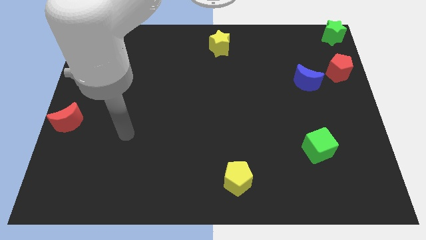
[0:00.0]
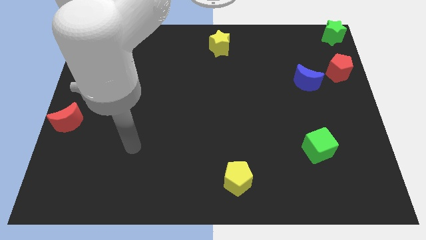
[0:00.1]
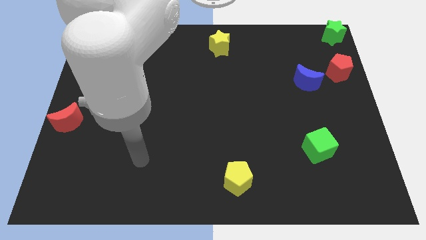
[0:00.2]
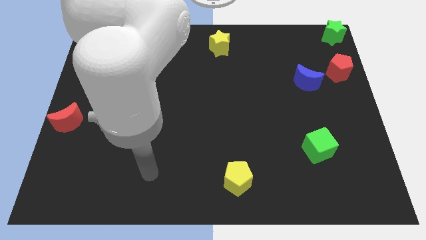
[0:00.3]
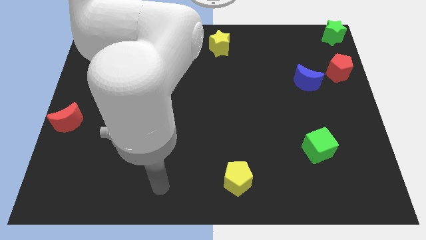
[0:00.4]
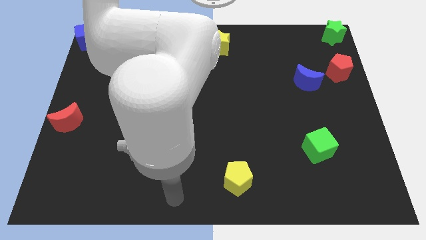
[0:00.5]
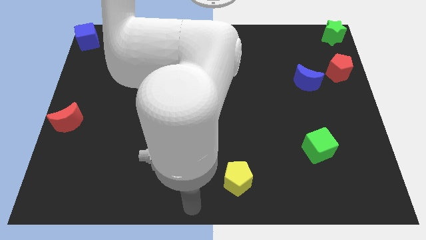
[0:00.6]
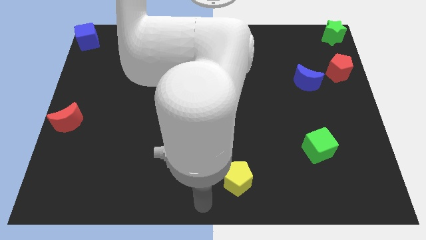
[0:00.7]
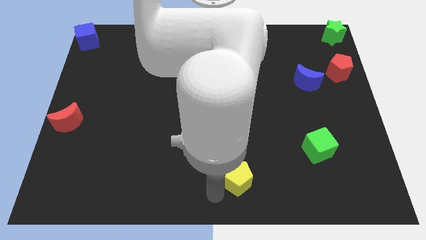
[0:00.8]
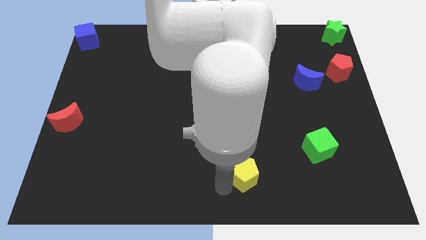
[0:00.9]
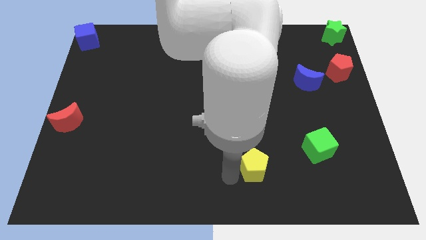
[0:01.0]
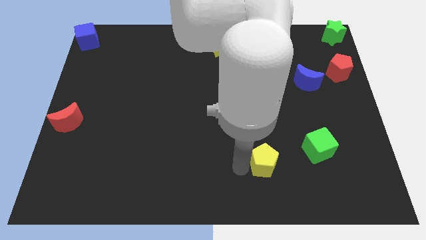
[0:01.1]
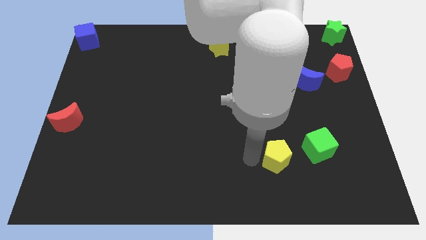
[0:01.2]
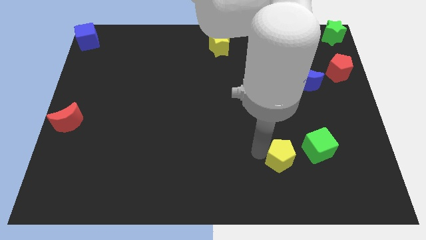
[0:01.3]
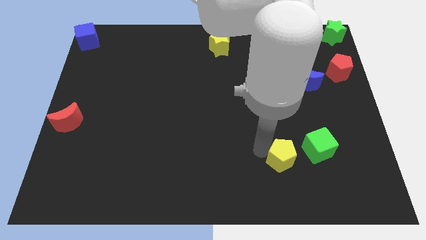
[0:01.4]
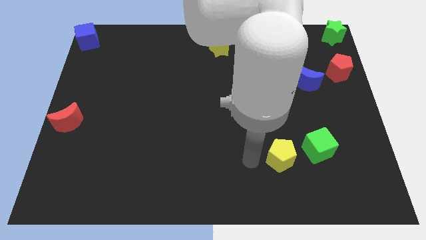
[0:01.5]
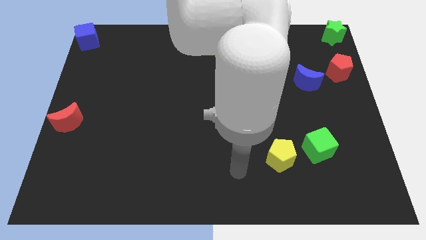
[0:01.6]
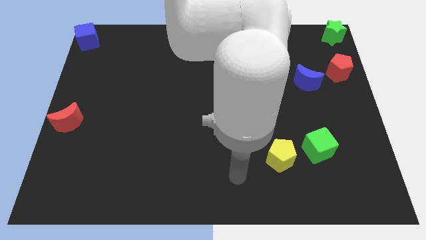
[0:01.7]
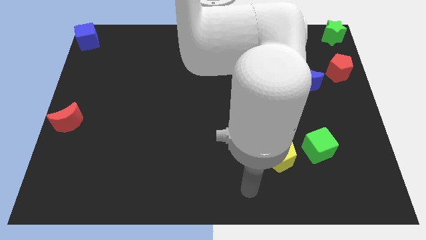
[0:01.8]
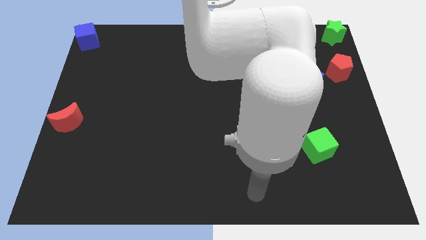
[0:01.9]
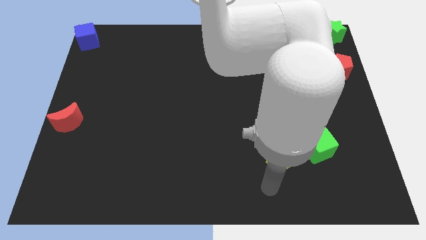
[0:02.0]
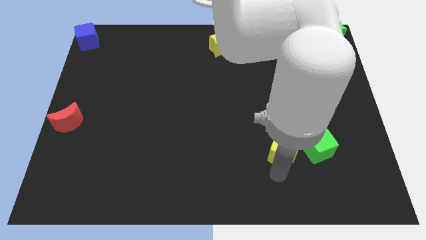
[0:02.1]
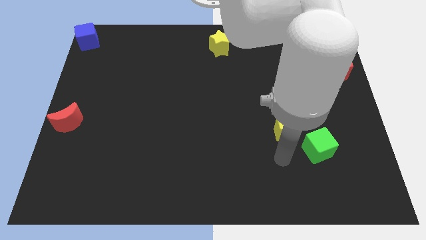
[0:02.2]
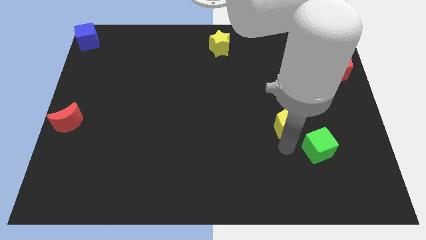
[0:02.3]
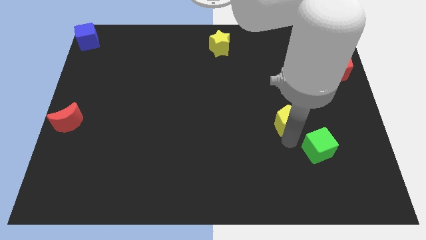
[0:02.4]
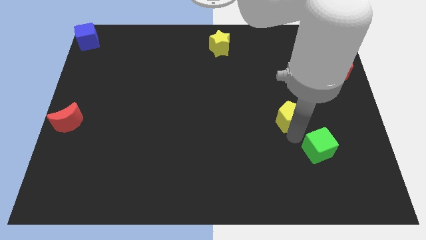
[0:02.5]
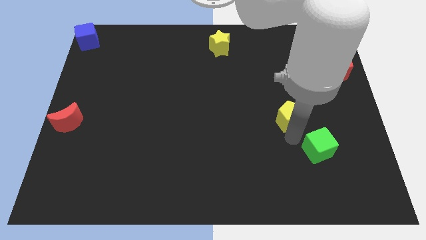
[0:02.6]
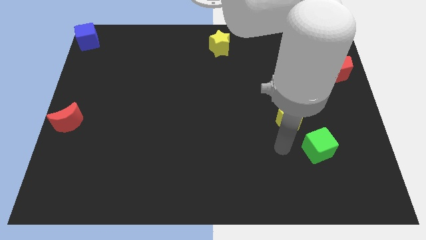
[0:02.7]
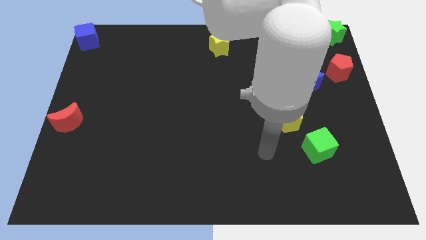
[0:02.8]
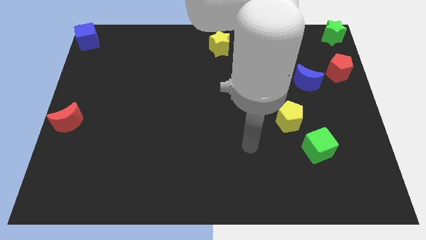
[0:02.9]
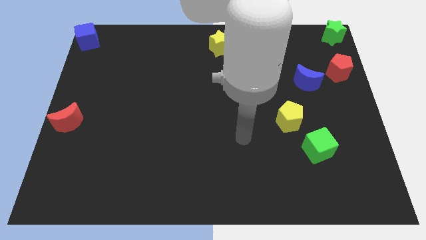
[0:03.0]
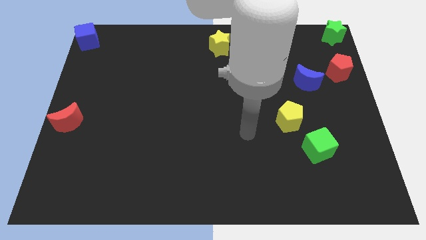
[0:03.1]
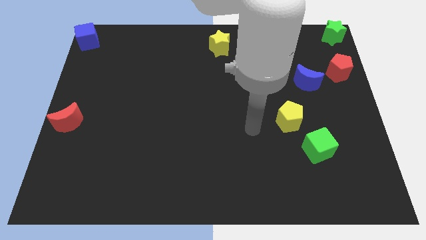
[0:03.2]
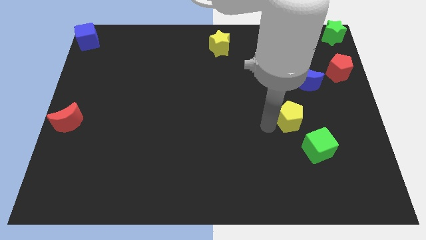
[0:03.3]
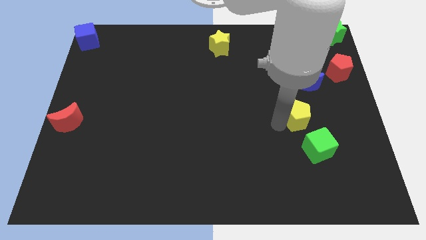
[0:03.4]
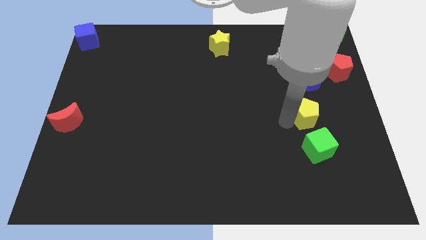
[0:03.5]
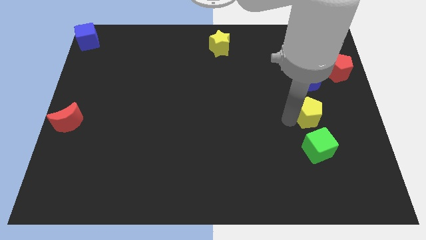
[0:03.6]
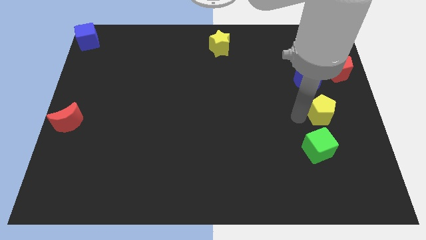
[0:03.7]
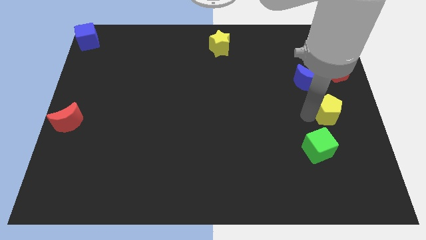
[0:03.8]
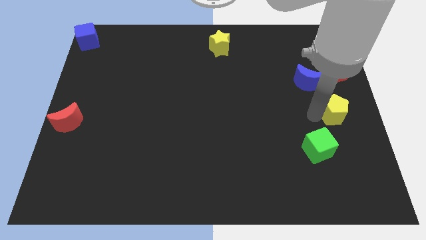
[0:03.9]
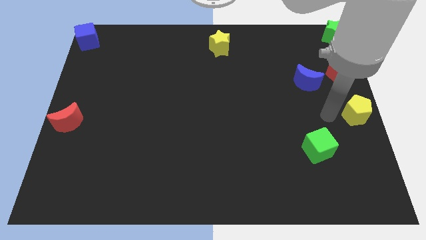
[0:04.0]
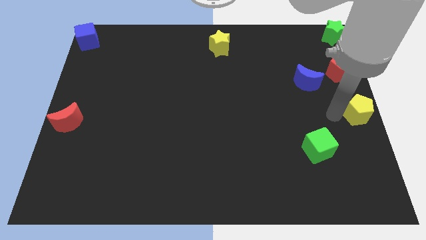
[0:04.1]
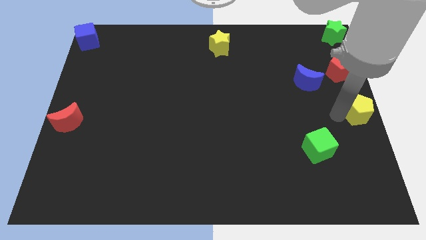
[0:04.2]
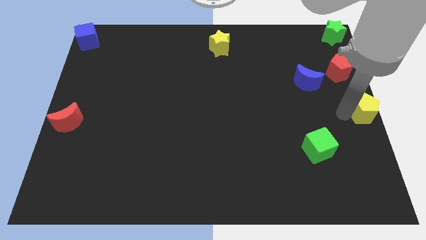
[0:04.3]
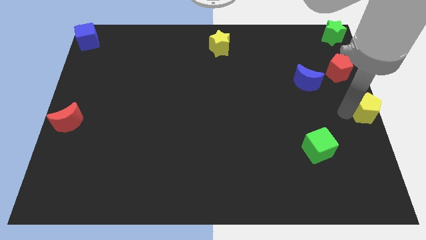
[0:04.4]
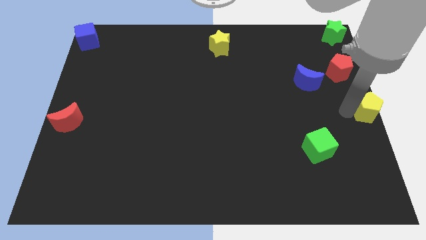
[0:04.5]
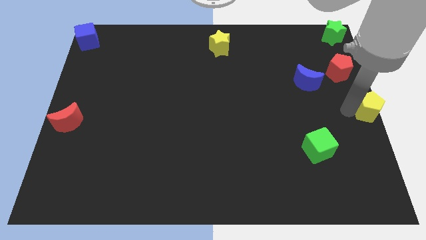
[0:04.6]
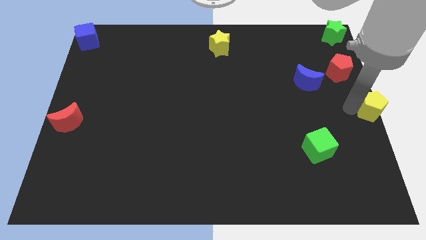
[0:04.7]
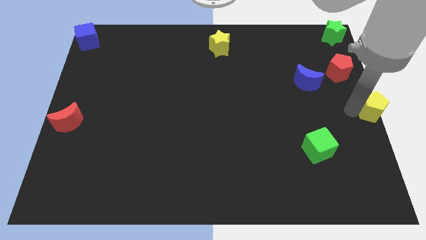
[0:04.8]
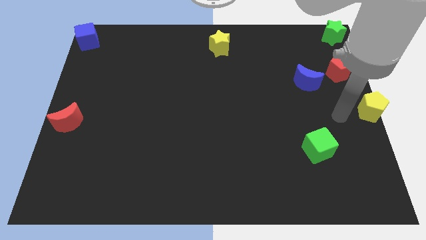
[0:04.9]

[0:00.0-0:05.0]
push the yellow pentagon to the right center of the board

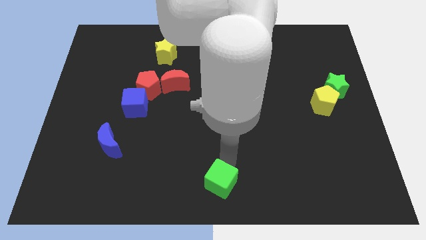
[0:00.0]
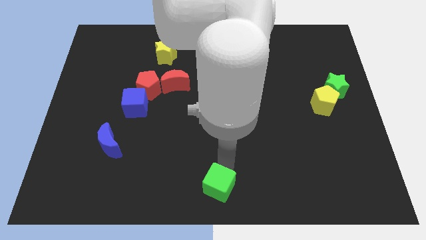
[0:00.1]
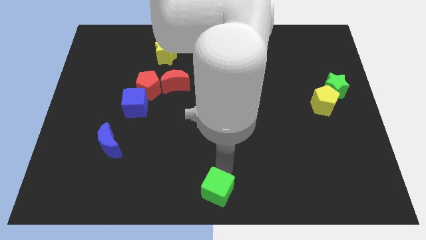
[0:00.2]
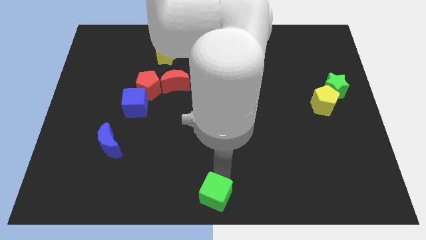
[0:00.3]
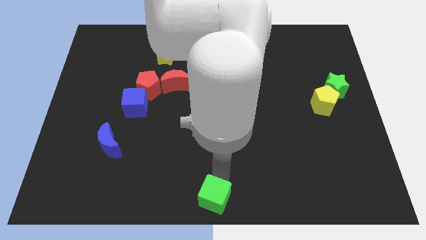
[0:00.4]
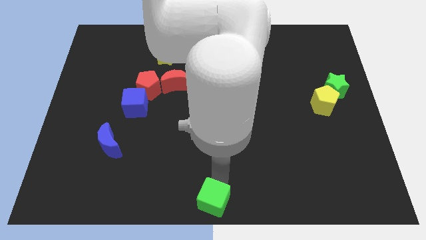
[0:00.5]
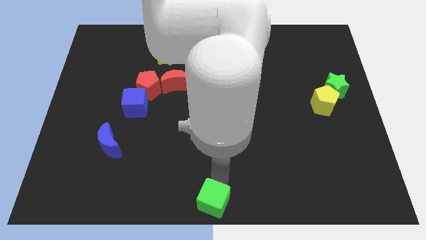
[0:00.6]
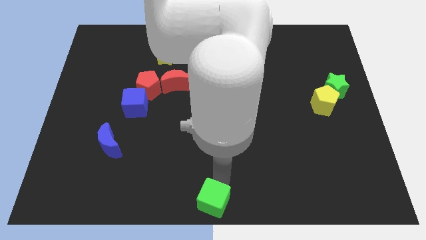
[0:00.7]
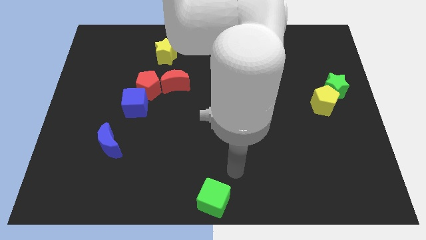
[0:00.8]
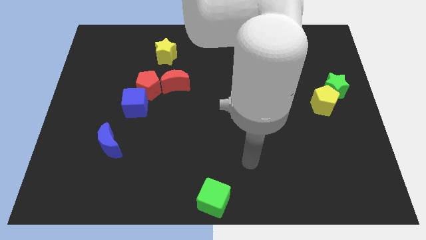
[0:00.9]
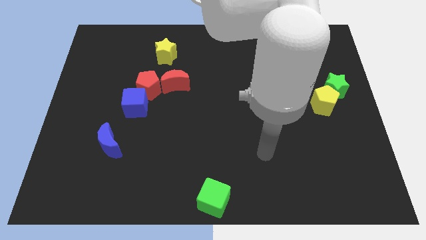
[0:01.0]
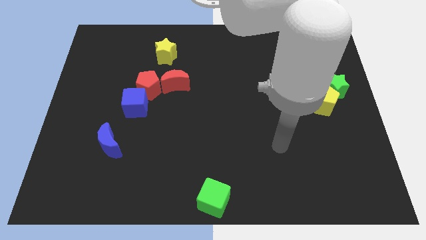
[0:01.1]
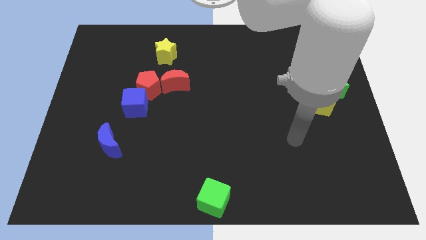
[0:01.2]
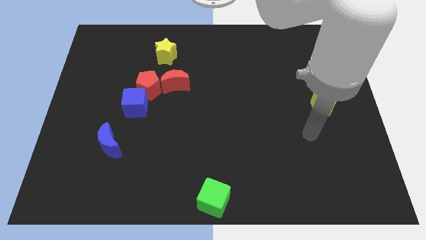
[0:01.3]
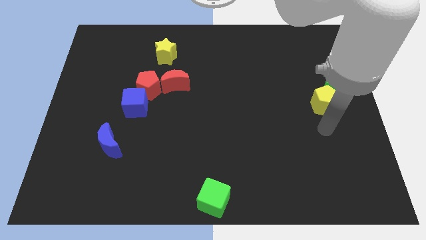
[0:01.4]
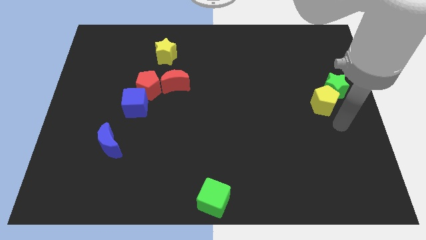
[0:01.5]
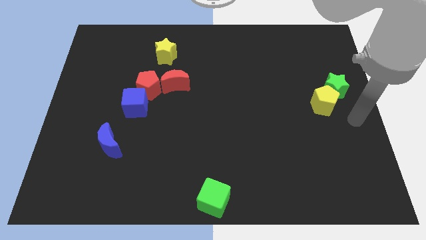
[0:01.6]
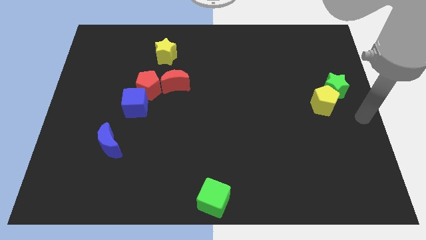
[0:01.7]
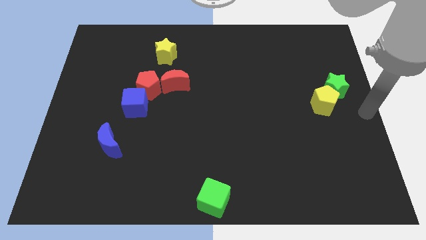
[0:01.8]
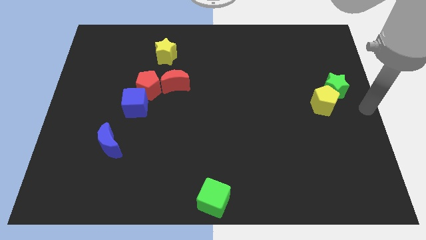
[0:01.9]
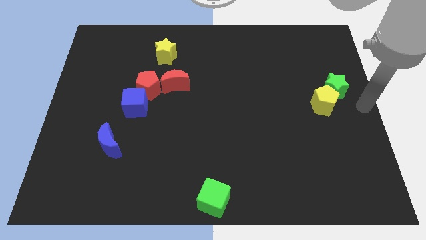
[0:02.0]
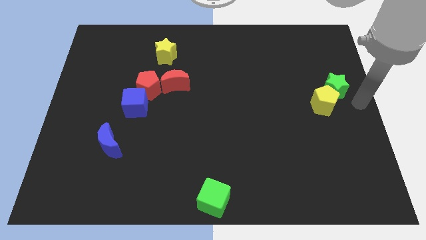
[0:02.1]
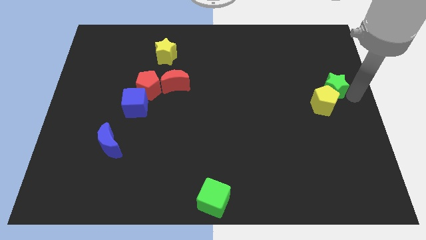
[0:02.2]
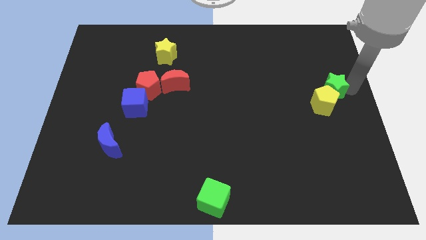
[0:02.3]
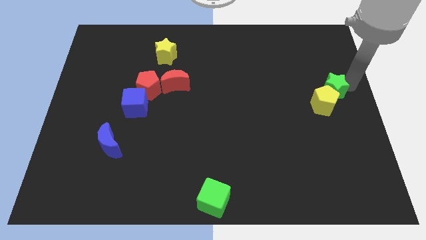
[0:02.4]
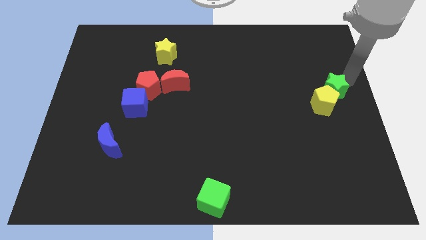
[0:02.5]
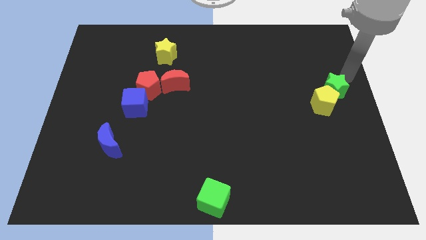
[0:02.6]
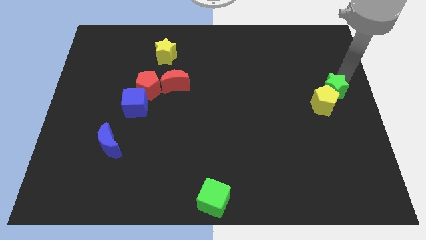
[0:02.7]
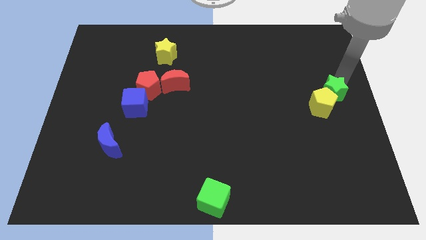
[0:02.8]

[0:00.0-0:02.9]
adjust the green cube to the bottom center line of the board

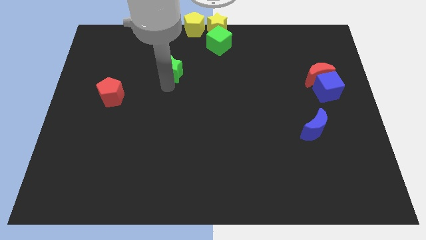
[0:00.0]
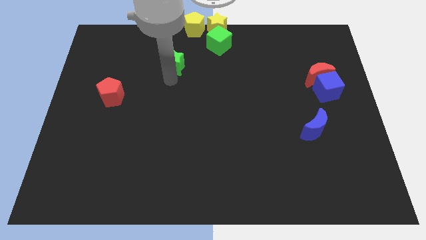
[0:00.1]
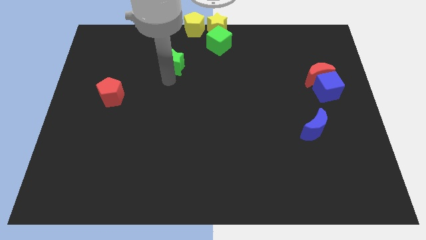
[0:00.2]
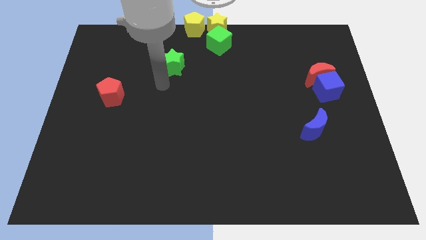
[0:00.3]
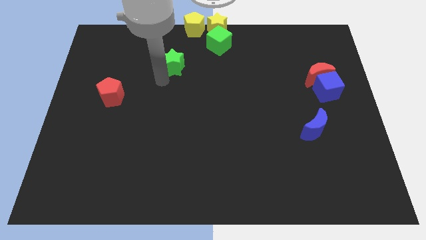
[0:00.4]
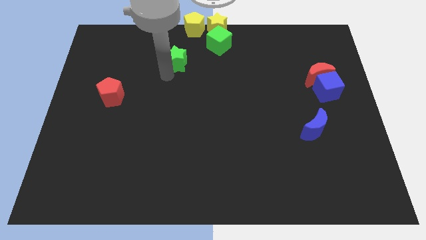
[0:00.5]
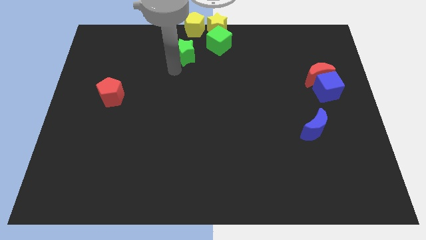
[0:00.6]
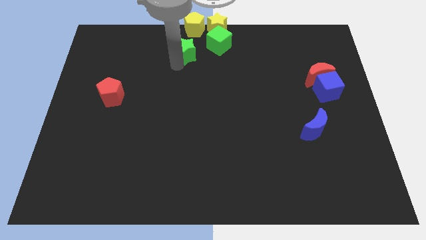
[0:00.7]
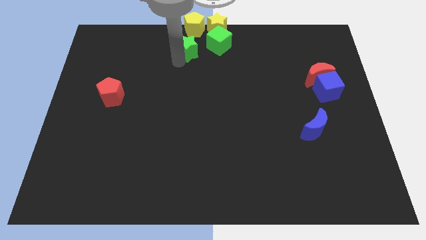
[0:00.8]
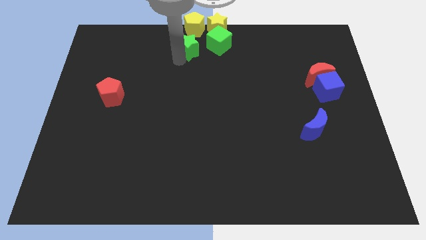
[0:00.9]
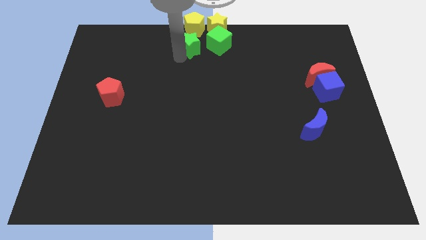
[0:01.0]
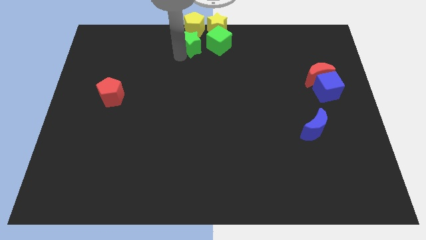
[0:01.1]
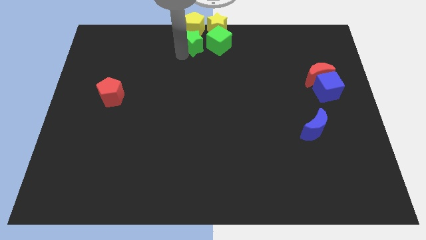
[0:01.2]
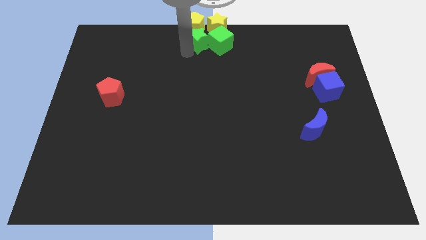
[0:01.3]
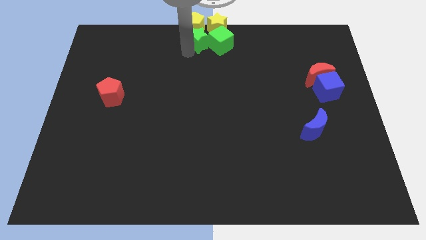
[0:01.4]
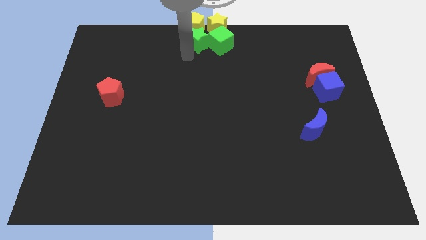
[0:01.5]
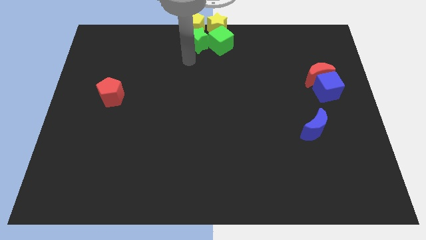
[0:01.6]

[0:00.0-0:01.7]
move the green star into the yellow blocks and green cube
